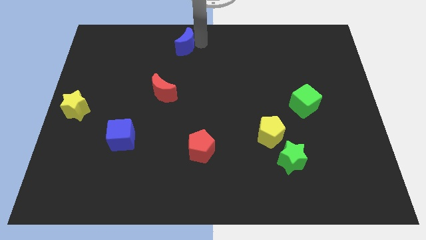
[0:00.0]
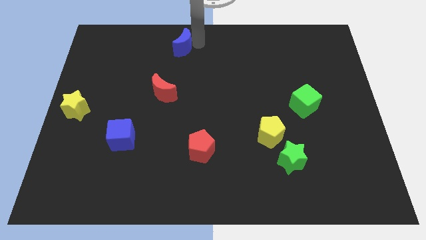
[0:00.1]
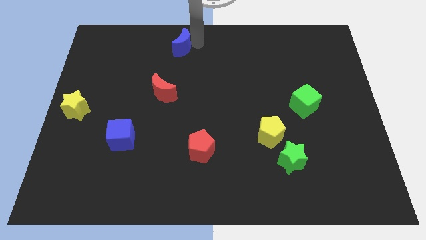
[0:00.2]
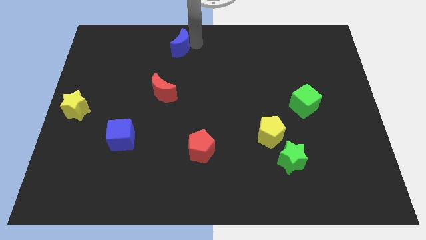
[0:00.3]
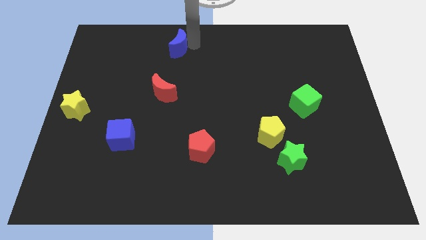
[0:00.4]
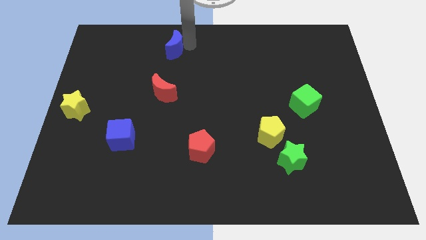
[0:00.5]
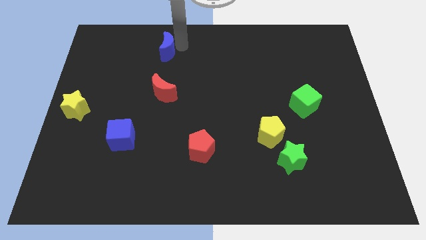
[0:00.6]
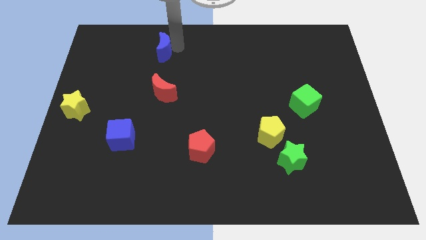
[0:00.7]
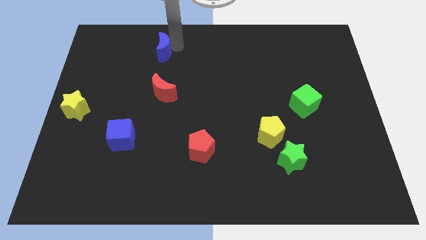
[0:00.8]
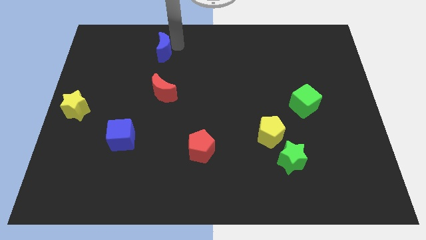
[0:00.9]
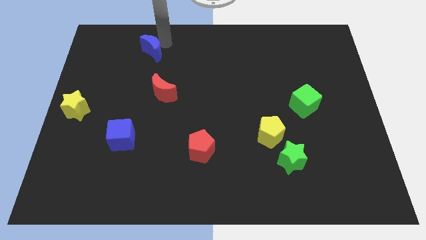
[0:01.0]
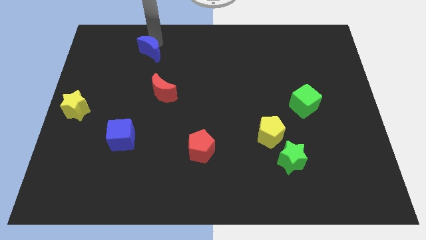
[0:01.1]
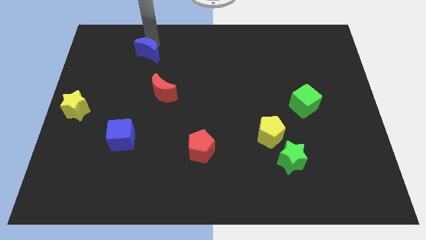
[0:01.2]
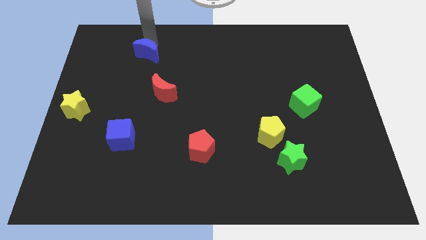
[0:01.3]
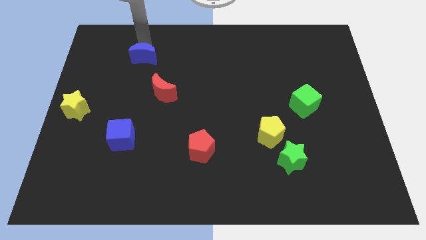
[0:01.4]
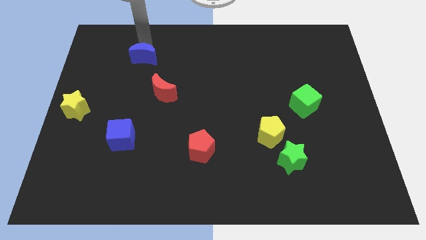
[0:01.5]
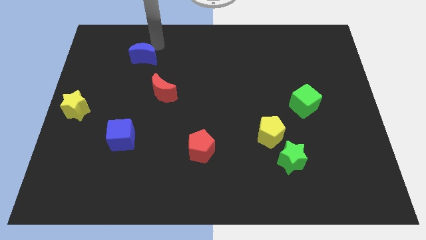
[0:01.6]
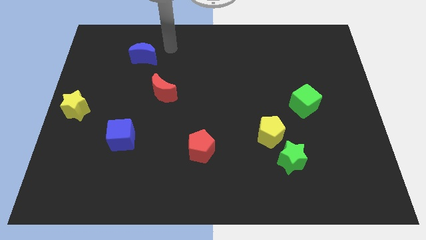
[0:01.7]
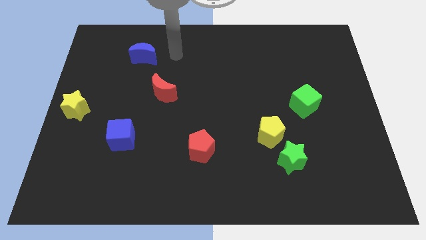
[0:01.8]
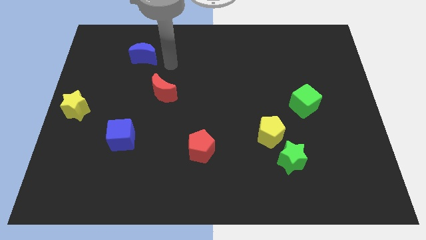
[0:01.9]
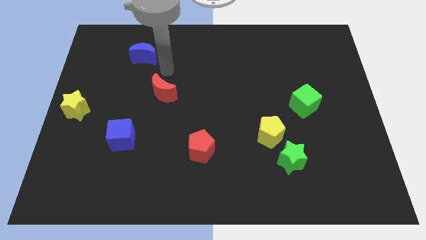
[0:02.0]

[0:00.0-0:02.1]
place blue moon above the blue cube

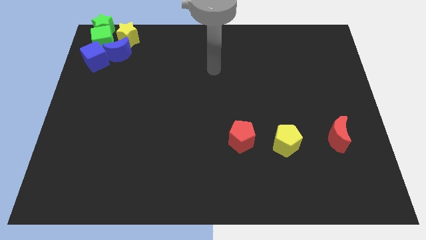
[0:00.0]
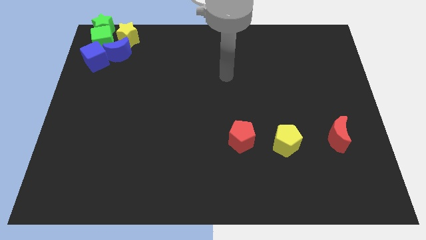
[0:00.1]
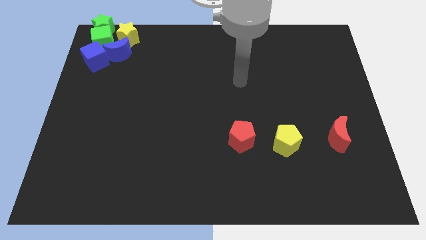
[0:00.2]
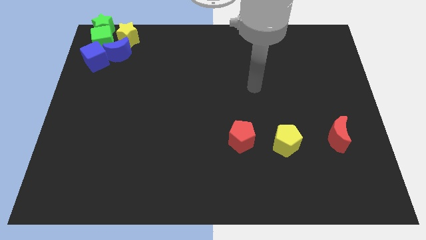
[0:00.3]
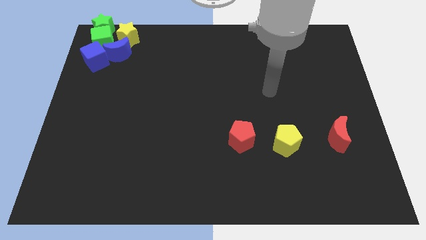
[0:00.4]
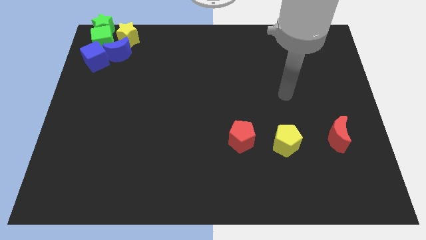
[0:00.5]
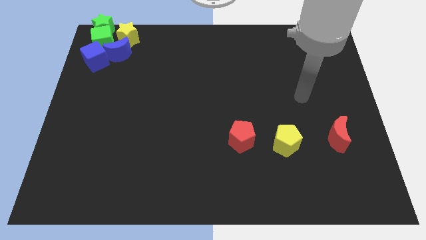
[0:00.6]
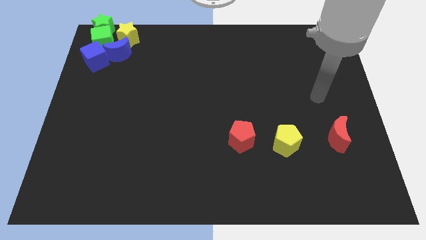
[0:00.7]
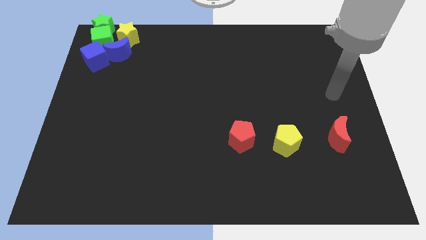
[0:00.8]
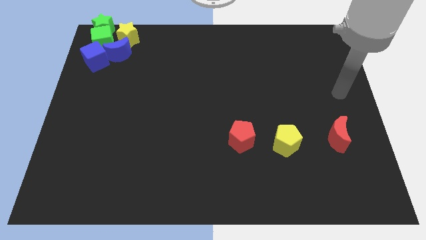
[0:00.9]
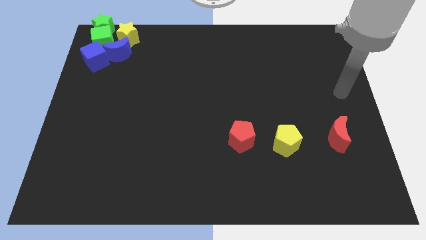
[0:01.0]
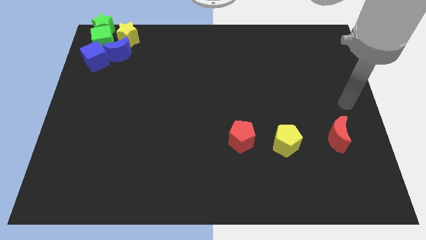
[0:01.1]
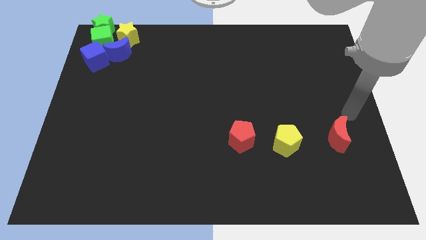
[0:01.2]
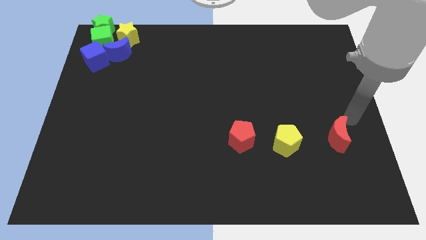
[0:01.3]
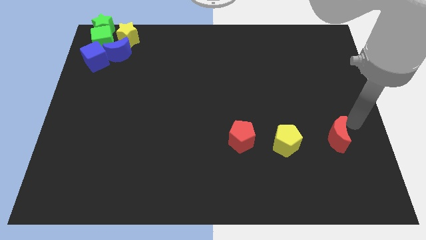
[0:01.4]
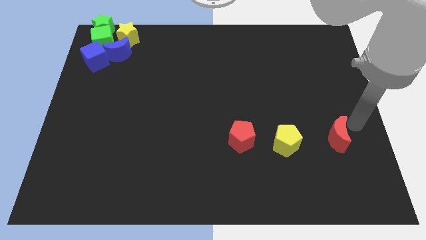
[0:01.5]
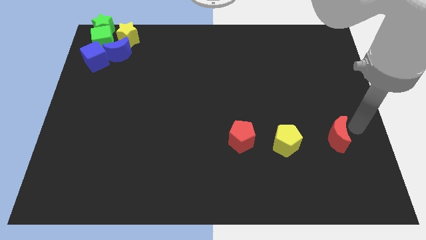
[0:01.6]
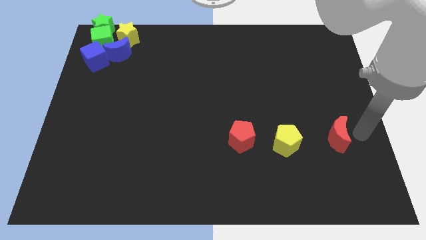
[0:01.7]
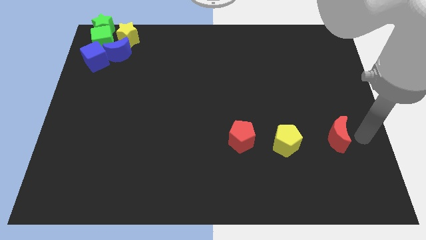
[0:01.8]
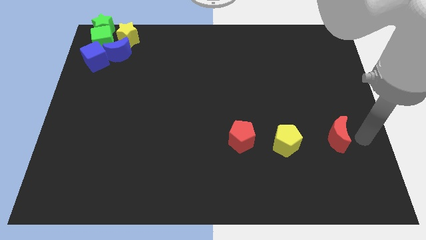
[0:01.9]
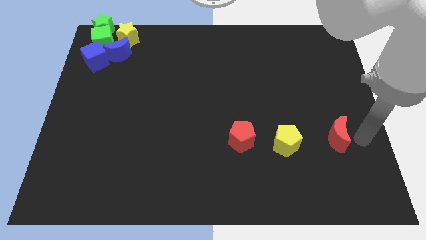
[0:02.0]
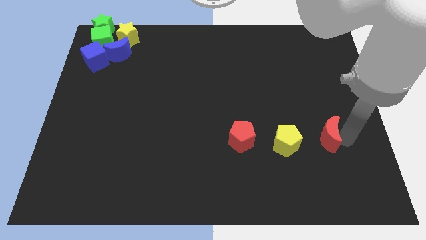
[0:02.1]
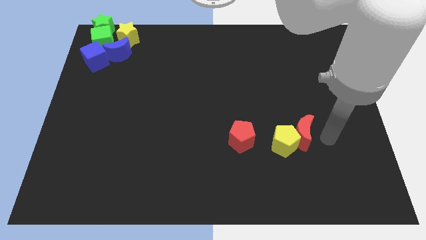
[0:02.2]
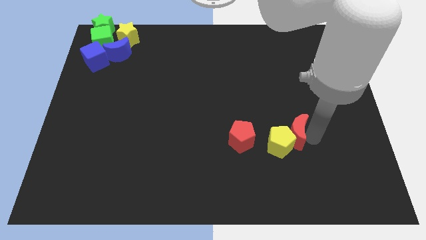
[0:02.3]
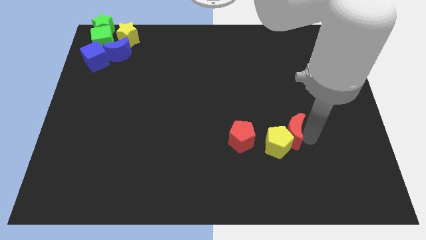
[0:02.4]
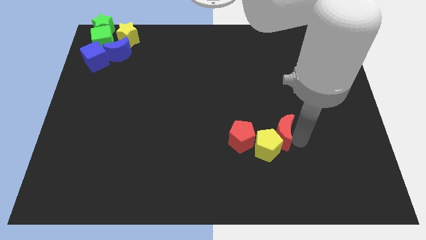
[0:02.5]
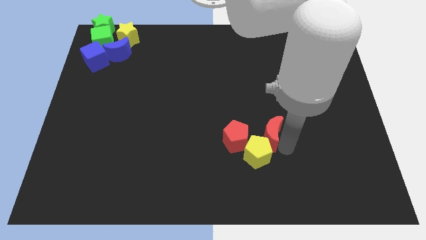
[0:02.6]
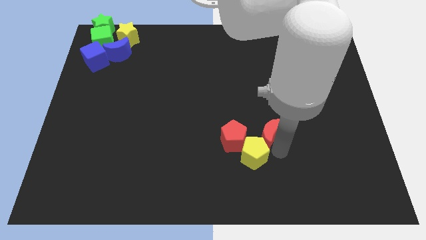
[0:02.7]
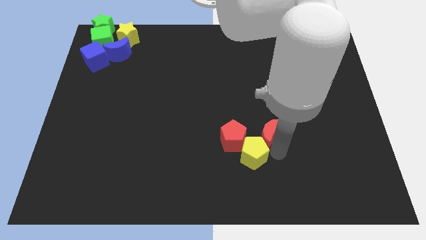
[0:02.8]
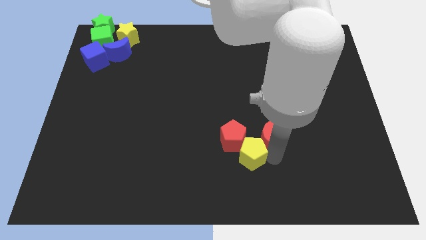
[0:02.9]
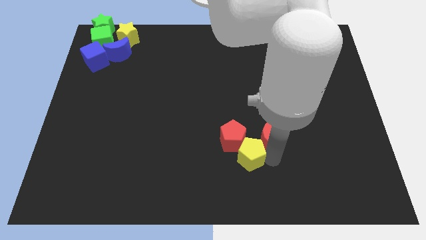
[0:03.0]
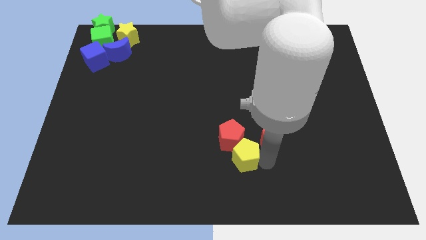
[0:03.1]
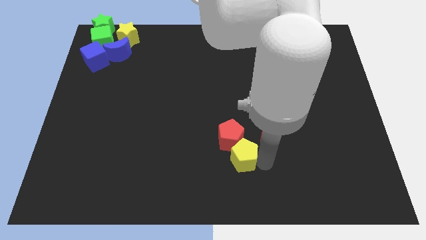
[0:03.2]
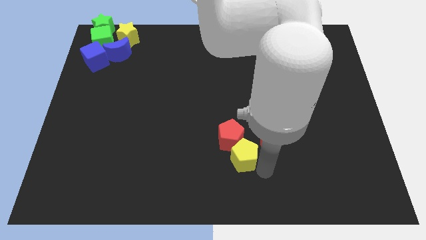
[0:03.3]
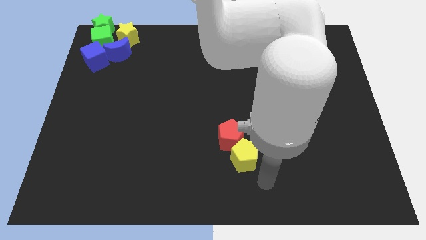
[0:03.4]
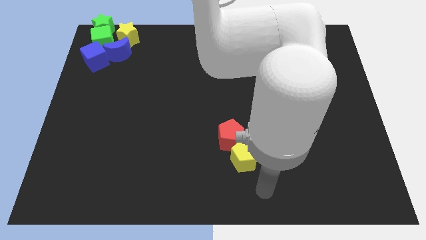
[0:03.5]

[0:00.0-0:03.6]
push red blocks and yellow pentagon towards the left side of the board

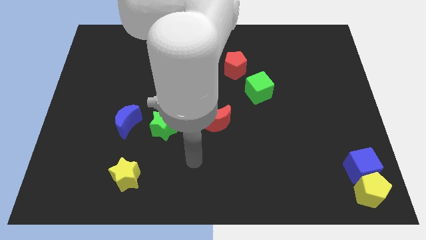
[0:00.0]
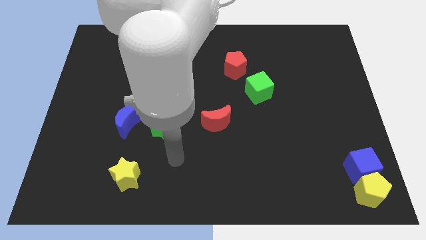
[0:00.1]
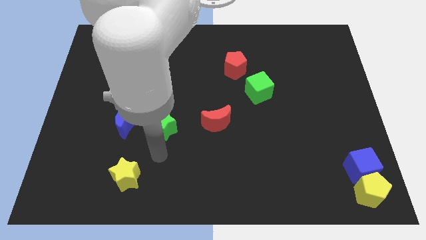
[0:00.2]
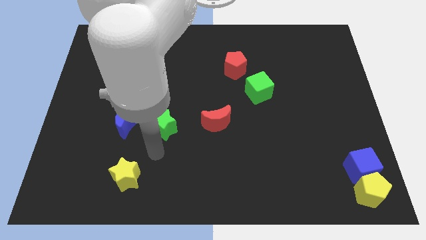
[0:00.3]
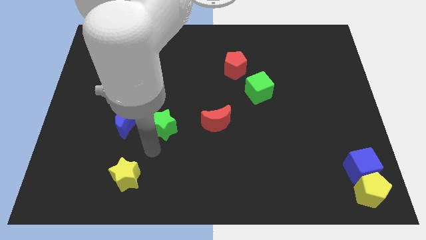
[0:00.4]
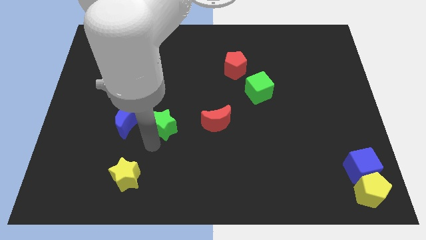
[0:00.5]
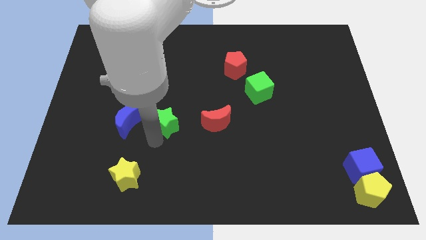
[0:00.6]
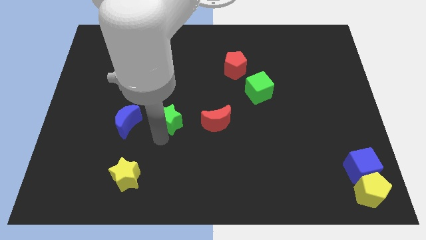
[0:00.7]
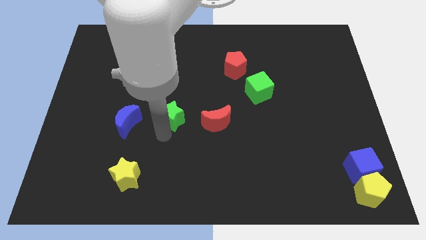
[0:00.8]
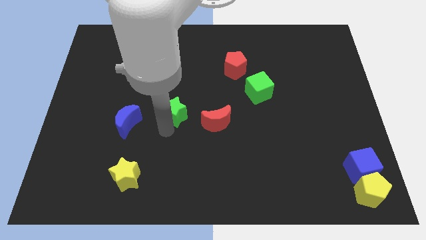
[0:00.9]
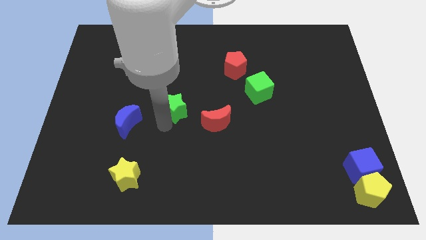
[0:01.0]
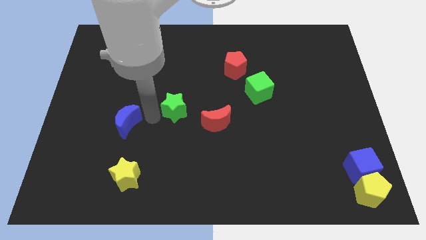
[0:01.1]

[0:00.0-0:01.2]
move the green star slightly upwards

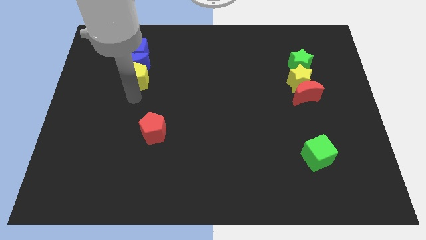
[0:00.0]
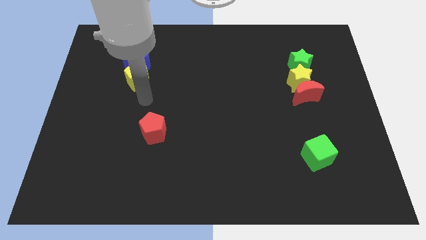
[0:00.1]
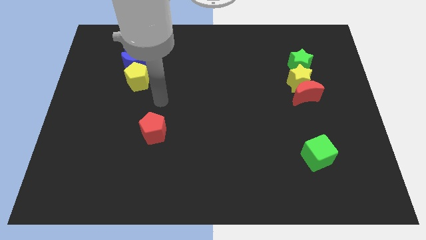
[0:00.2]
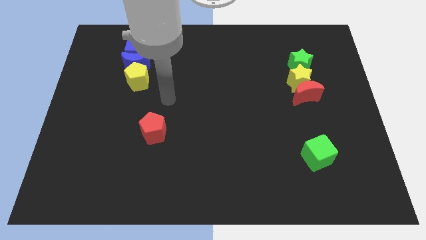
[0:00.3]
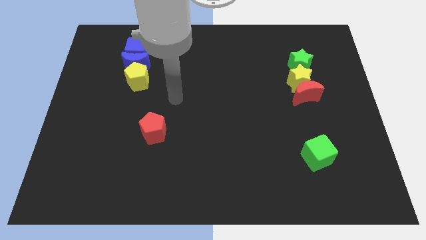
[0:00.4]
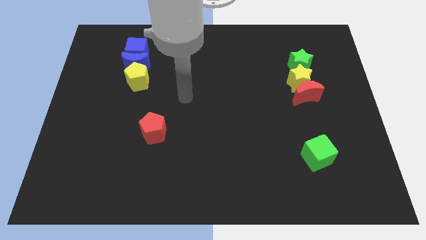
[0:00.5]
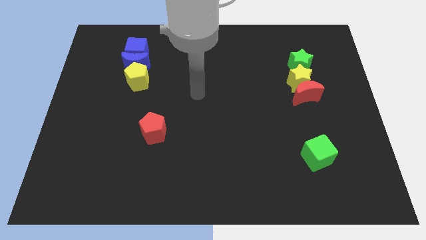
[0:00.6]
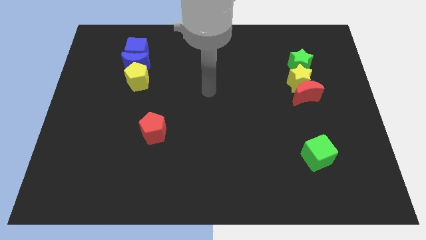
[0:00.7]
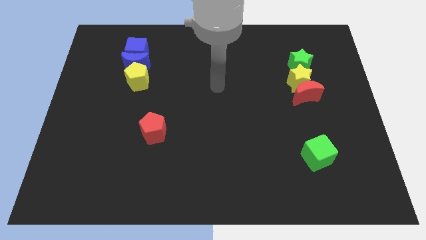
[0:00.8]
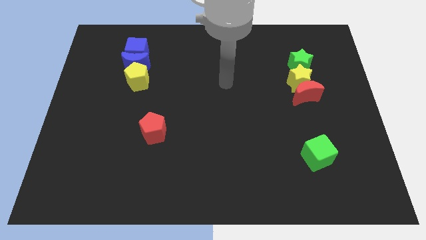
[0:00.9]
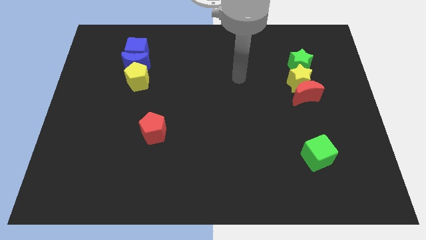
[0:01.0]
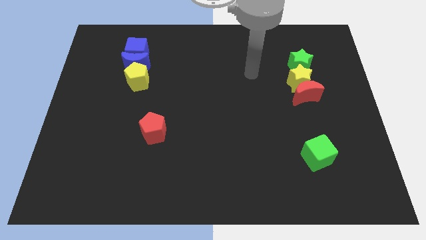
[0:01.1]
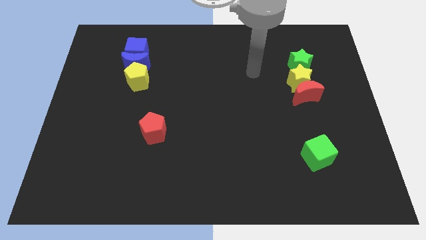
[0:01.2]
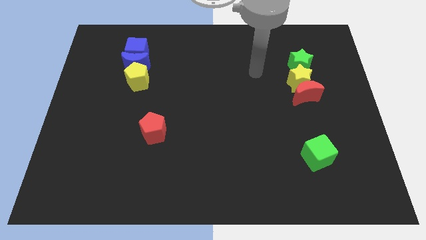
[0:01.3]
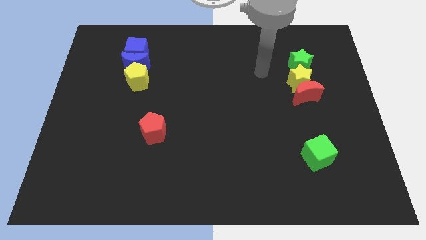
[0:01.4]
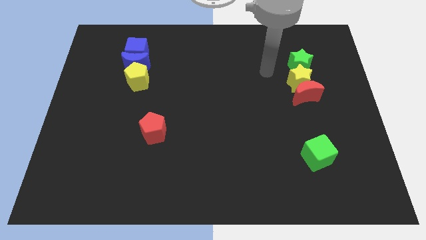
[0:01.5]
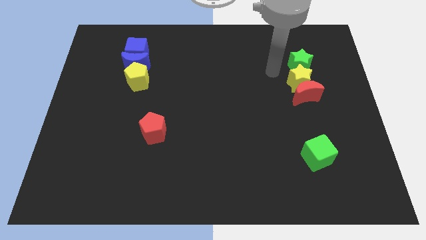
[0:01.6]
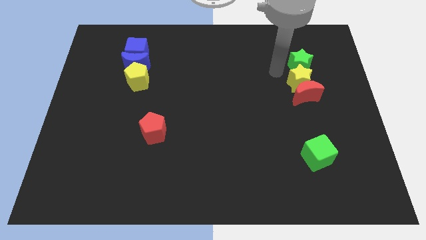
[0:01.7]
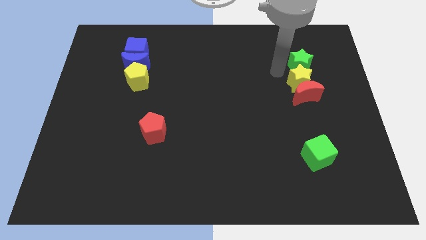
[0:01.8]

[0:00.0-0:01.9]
point your arm at the left of the green star

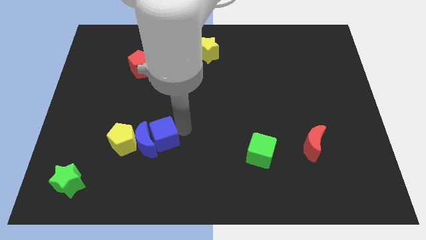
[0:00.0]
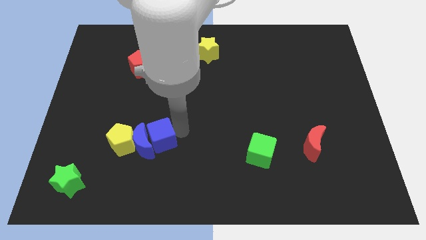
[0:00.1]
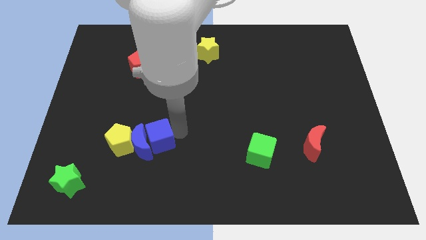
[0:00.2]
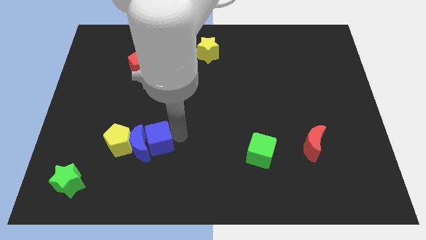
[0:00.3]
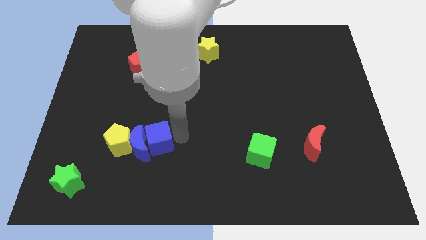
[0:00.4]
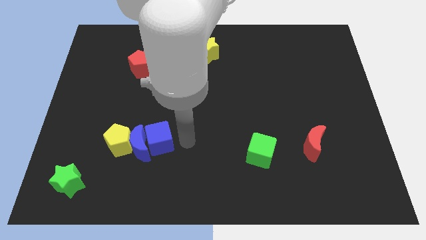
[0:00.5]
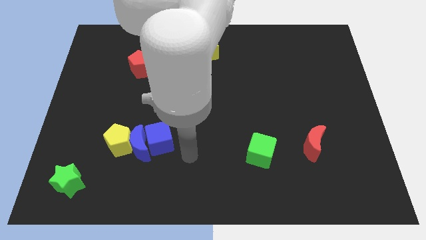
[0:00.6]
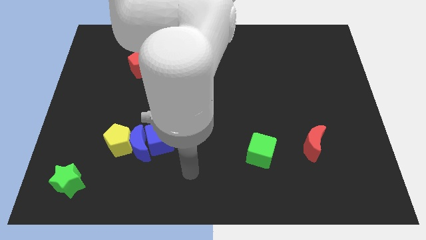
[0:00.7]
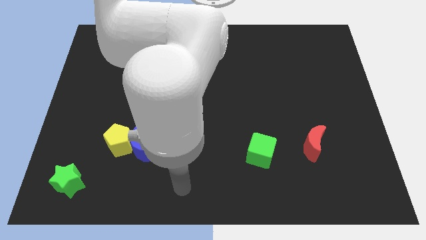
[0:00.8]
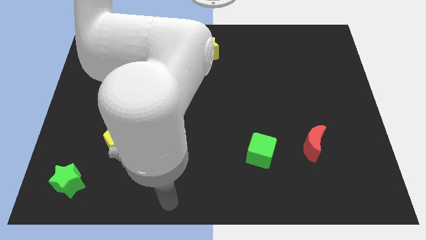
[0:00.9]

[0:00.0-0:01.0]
push the blue cube and blue crescent into the yellow pentagon
